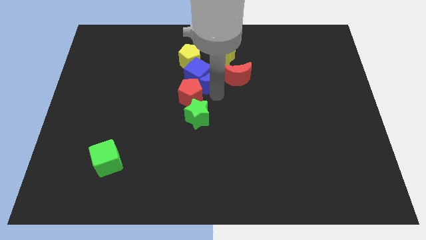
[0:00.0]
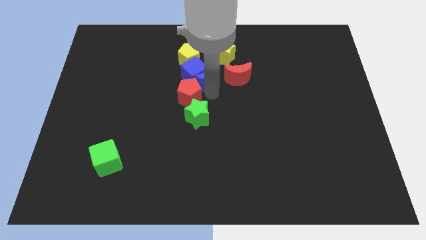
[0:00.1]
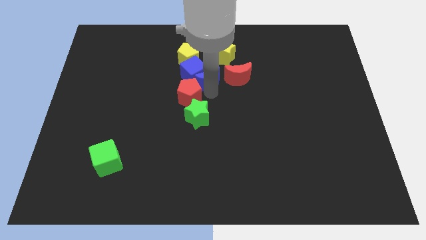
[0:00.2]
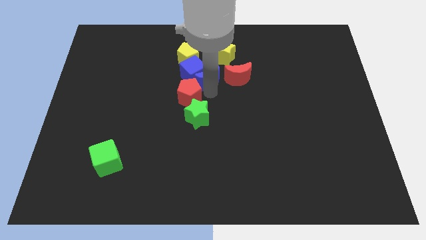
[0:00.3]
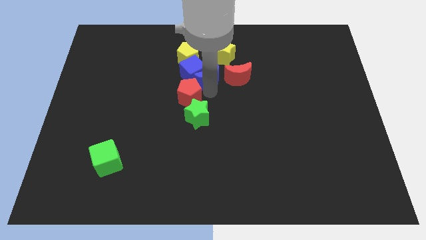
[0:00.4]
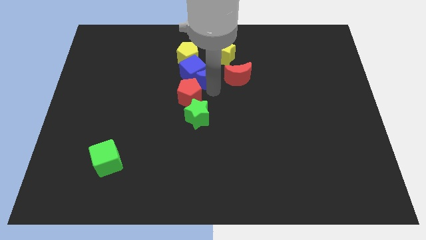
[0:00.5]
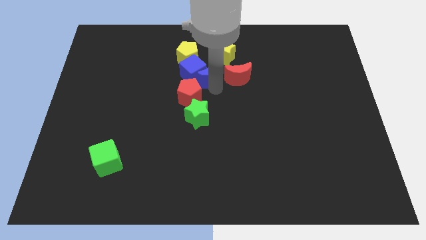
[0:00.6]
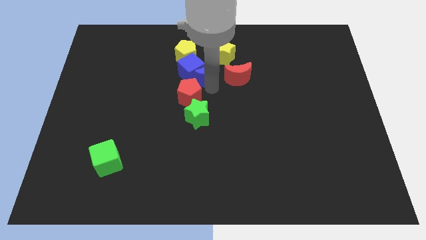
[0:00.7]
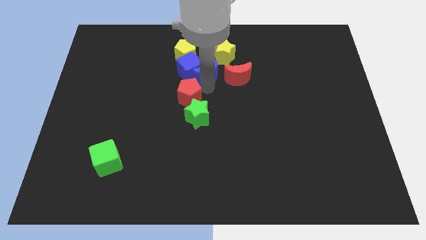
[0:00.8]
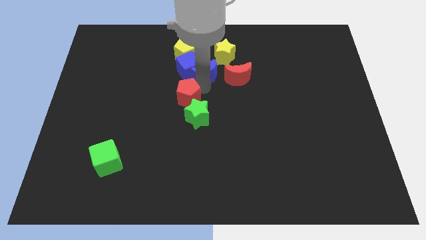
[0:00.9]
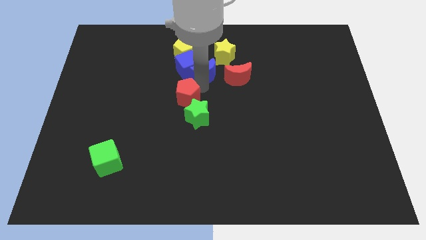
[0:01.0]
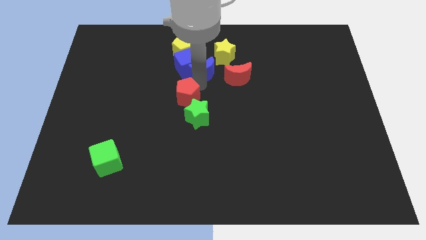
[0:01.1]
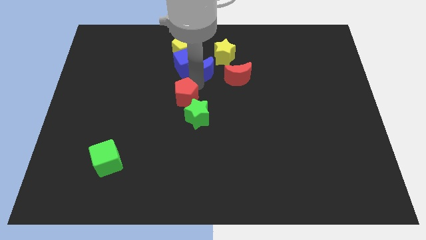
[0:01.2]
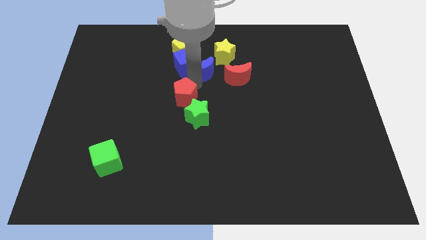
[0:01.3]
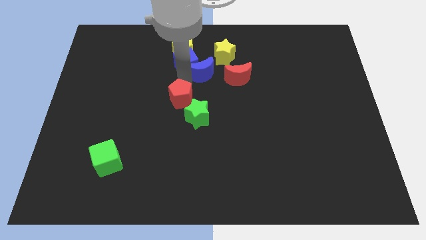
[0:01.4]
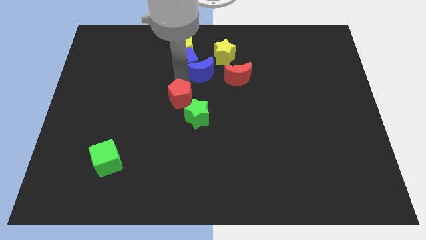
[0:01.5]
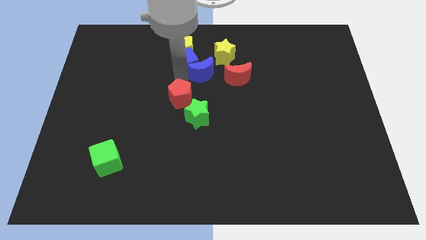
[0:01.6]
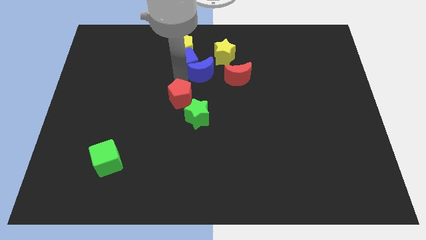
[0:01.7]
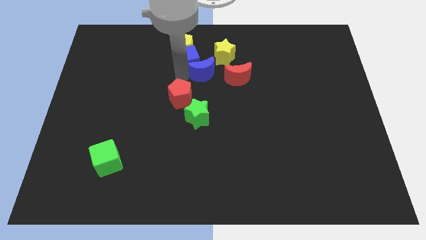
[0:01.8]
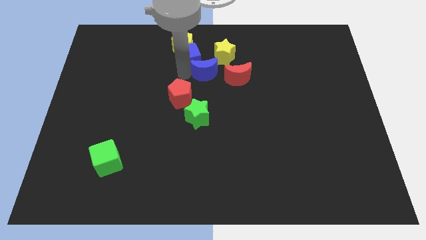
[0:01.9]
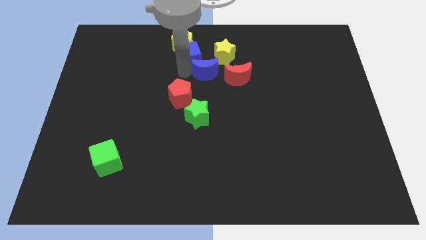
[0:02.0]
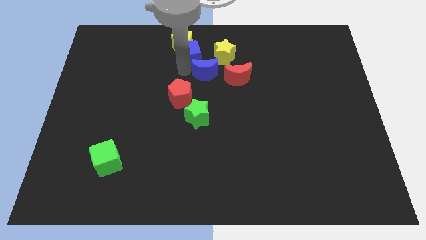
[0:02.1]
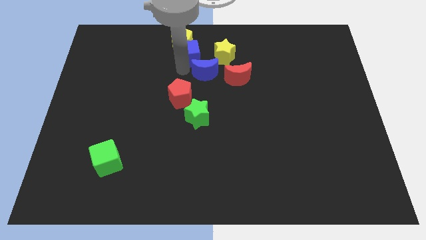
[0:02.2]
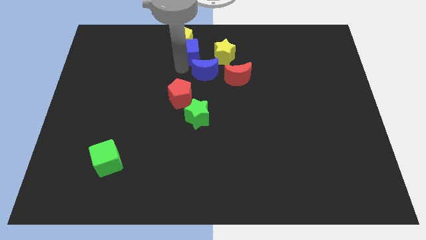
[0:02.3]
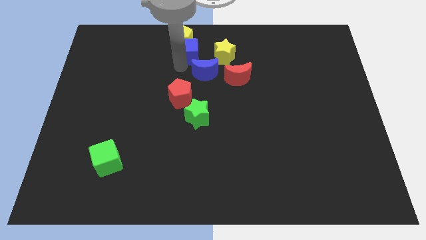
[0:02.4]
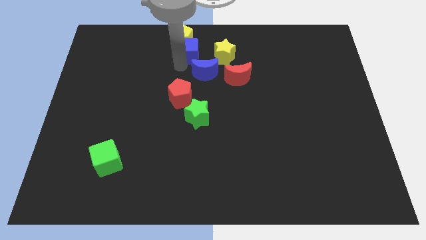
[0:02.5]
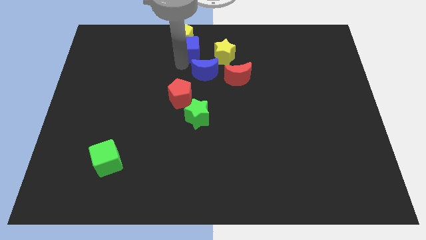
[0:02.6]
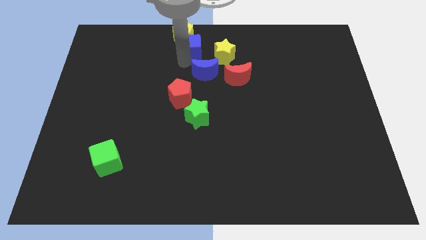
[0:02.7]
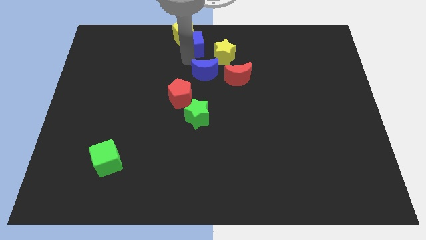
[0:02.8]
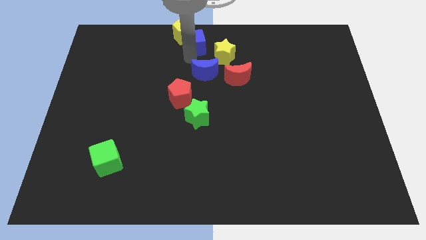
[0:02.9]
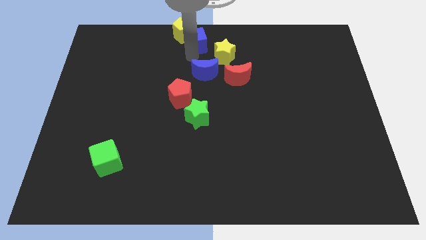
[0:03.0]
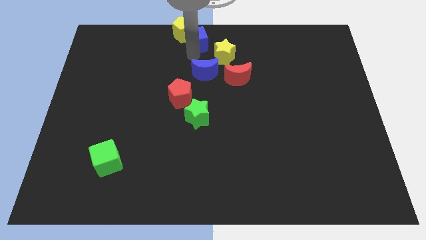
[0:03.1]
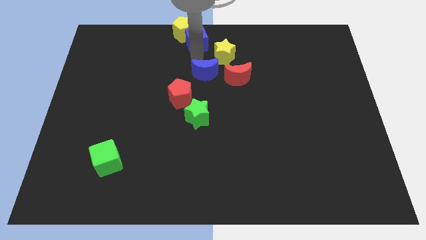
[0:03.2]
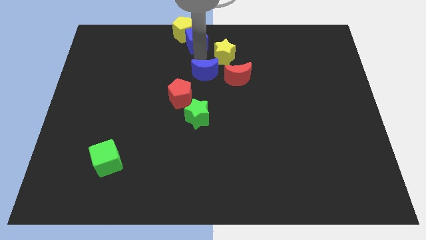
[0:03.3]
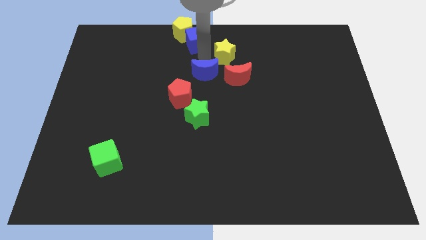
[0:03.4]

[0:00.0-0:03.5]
place blue cube to the top of blue moon

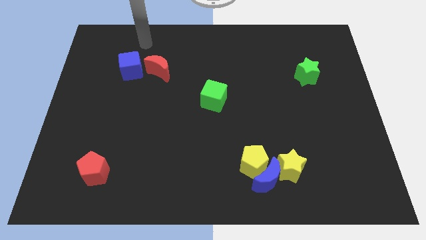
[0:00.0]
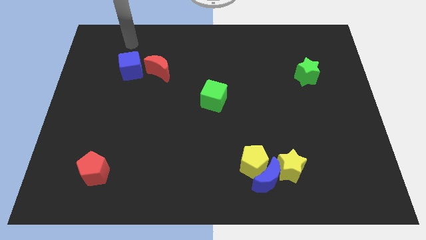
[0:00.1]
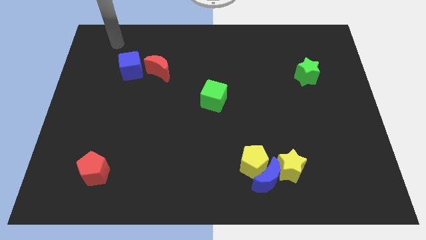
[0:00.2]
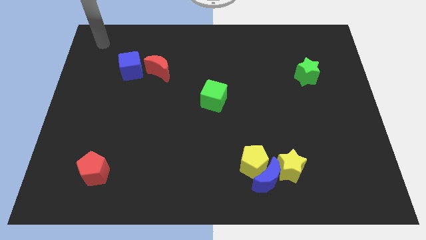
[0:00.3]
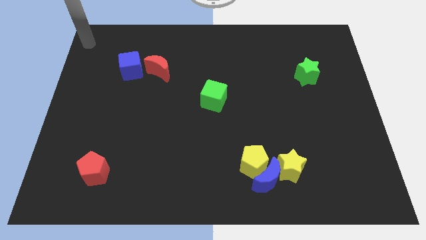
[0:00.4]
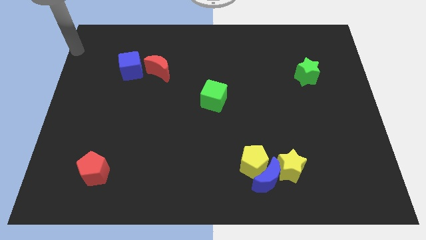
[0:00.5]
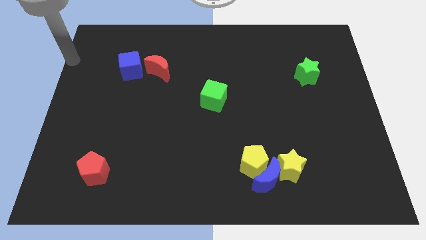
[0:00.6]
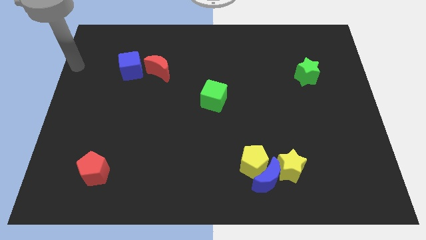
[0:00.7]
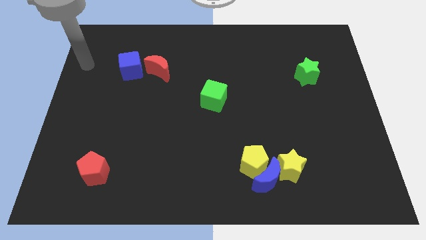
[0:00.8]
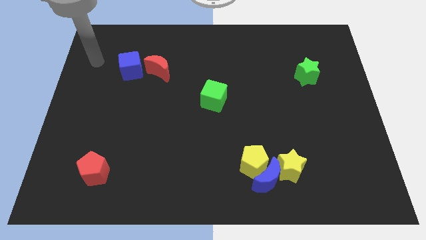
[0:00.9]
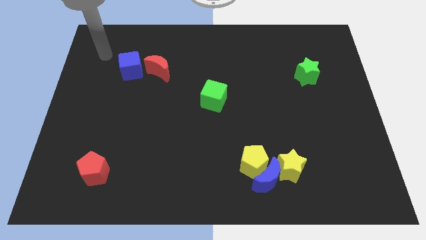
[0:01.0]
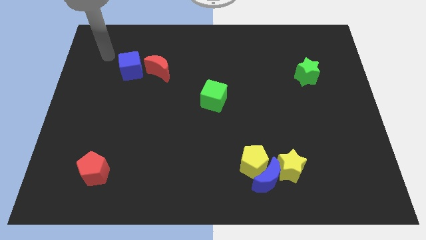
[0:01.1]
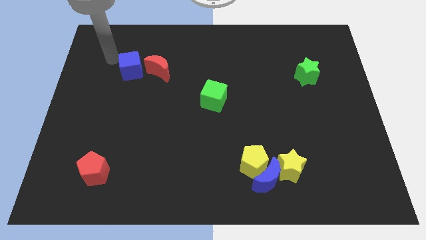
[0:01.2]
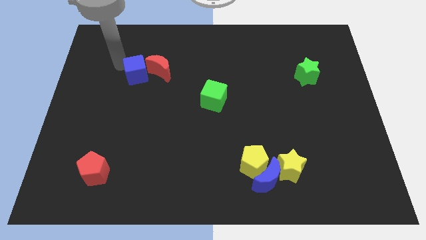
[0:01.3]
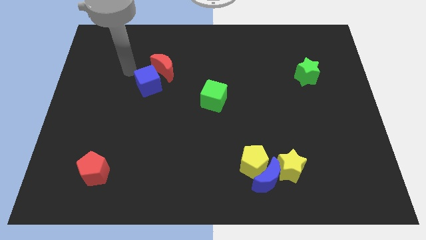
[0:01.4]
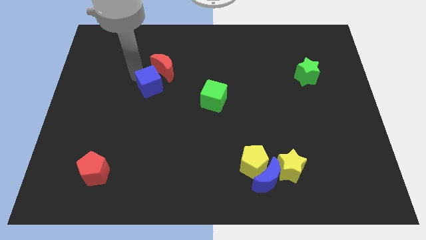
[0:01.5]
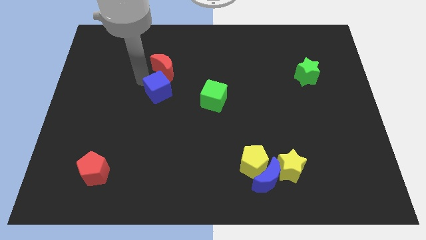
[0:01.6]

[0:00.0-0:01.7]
adjust the blue cube vertically below the red crescent

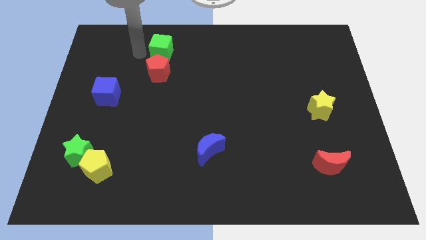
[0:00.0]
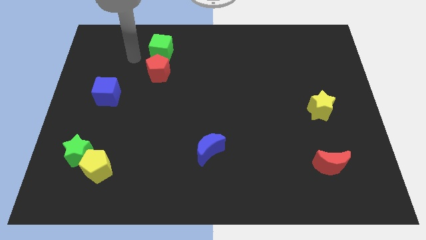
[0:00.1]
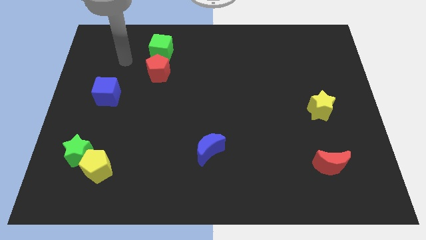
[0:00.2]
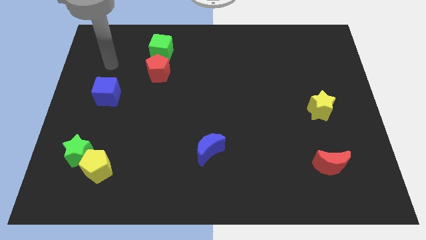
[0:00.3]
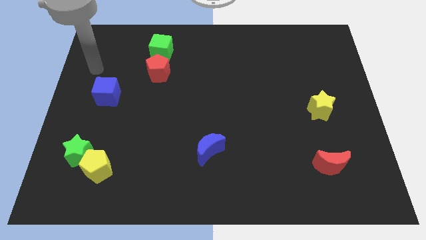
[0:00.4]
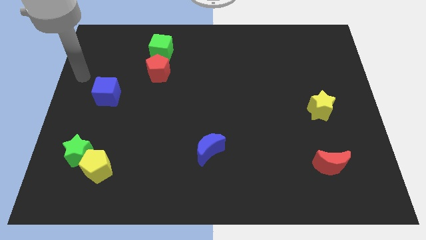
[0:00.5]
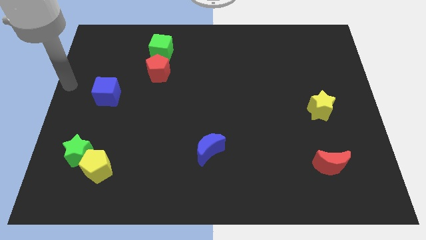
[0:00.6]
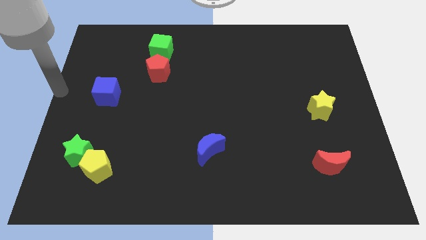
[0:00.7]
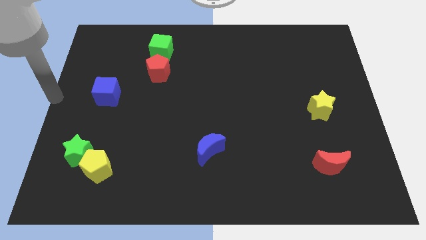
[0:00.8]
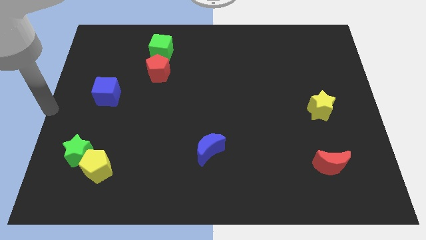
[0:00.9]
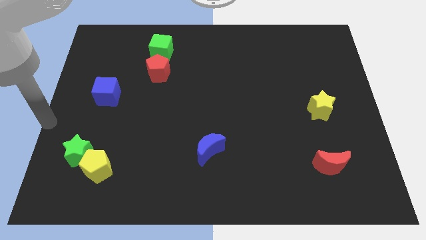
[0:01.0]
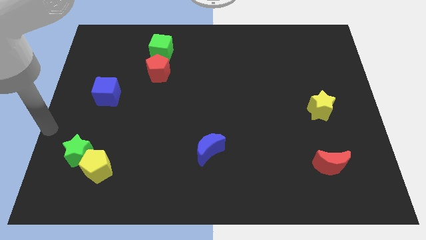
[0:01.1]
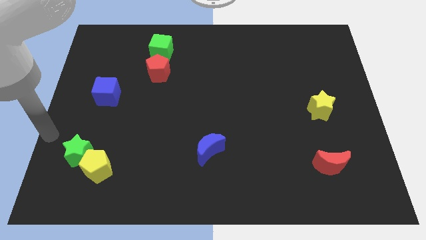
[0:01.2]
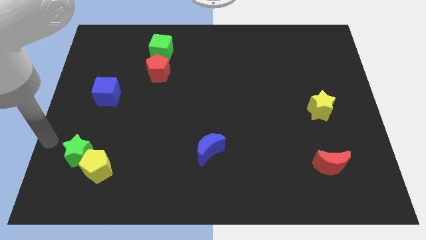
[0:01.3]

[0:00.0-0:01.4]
move your arm to the left of green star

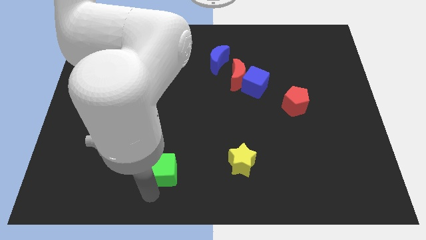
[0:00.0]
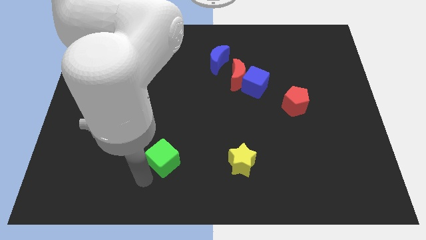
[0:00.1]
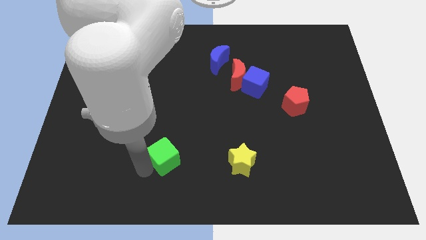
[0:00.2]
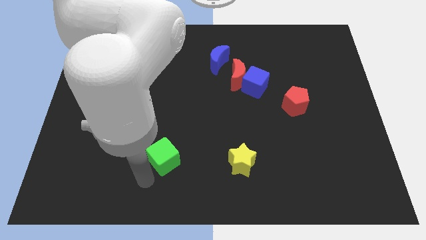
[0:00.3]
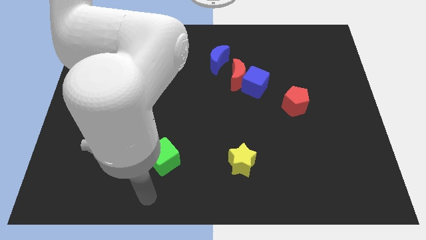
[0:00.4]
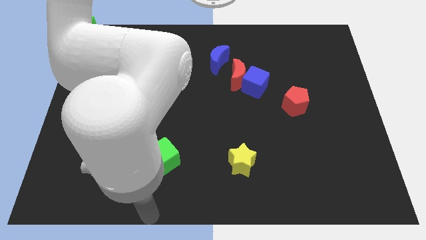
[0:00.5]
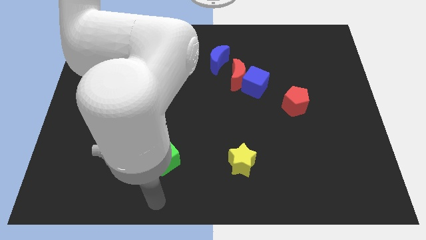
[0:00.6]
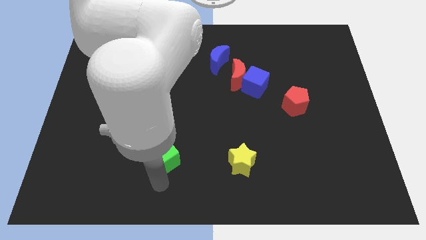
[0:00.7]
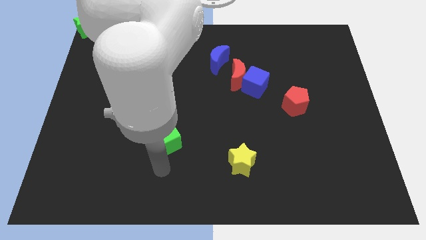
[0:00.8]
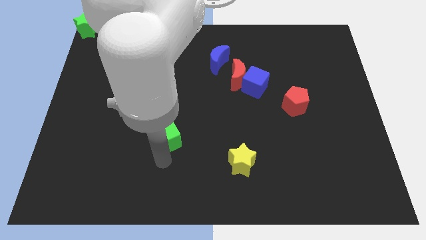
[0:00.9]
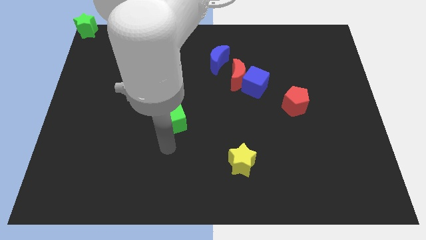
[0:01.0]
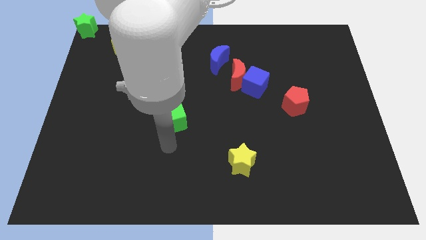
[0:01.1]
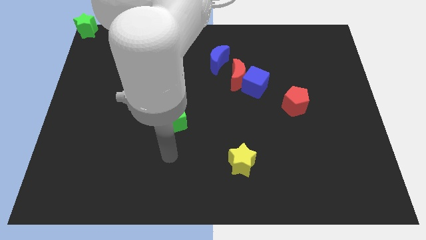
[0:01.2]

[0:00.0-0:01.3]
slide the green cube upwards

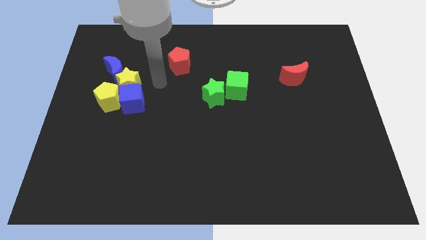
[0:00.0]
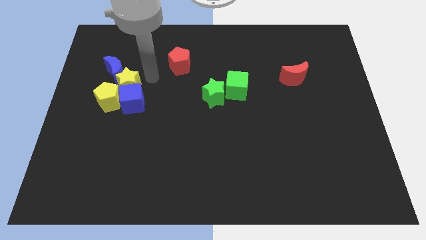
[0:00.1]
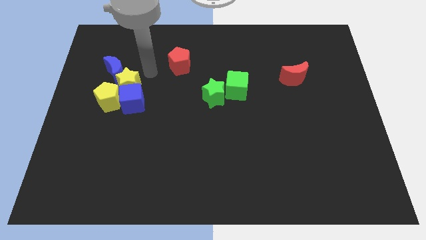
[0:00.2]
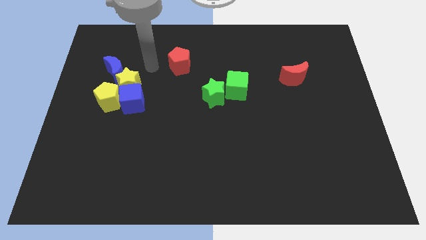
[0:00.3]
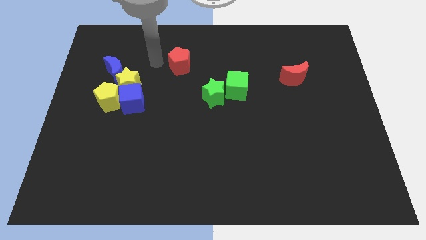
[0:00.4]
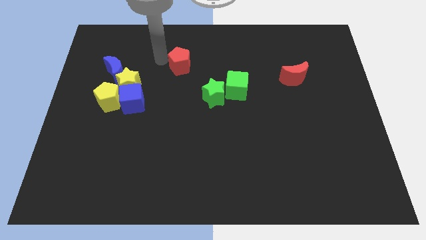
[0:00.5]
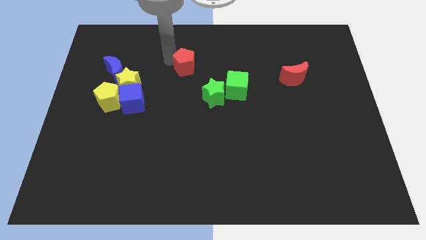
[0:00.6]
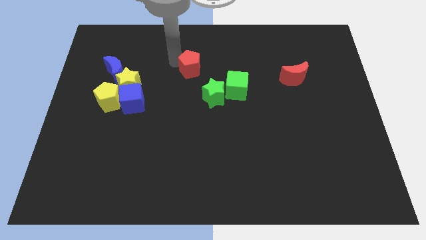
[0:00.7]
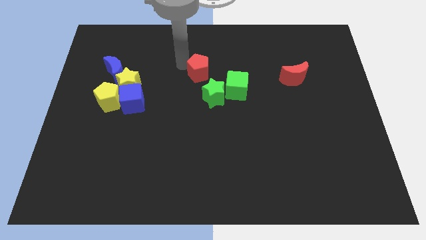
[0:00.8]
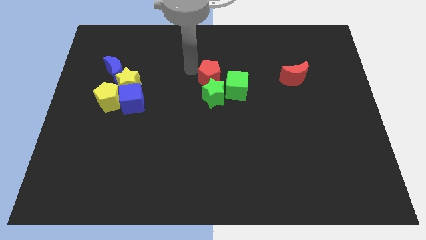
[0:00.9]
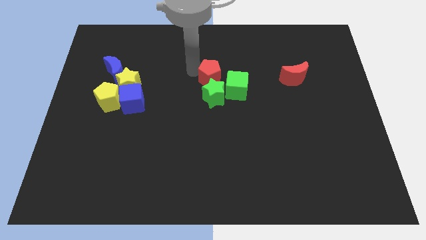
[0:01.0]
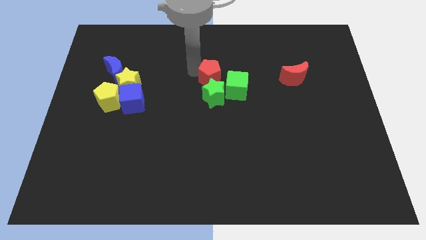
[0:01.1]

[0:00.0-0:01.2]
place red pentagon to the top of the green star
